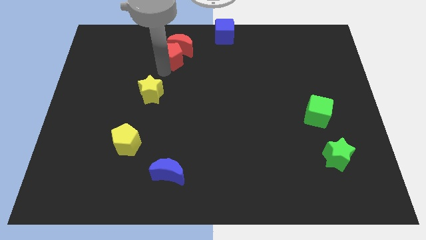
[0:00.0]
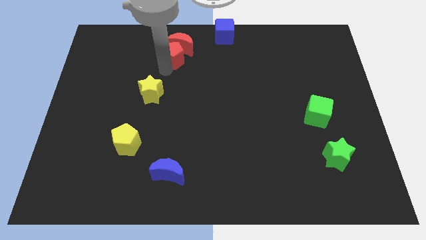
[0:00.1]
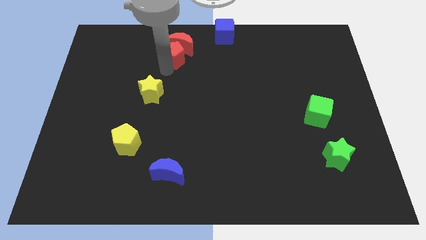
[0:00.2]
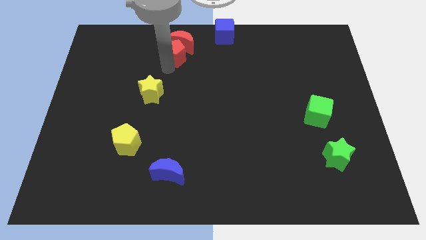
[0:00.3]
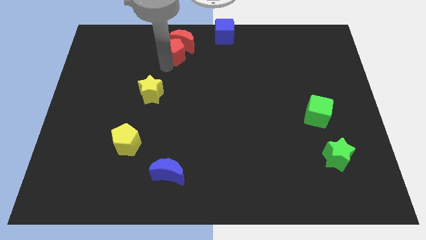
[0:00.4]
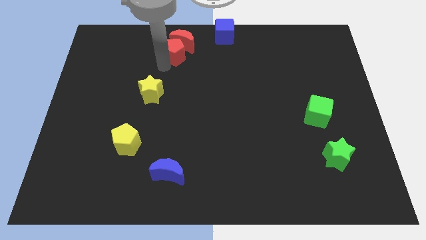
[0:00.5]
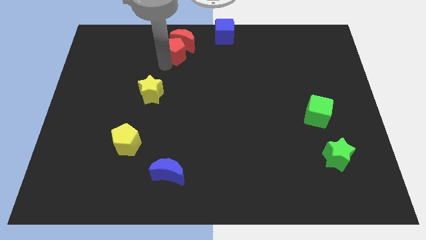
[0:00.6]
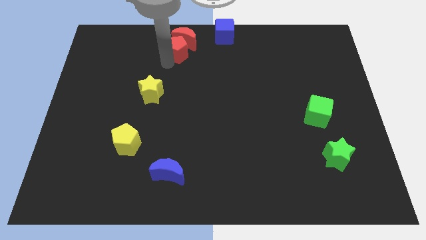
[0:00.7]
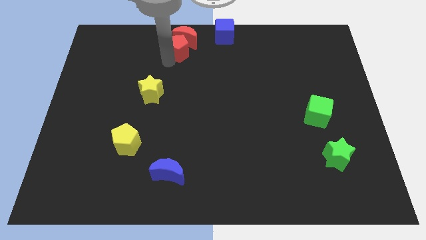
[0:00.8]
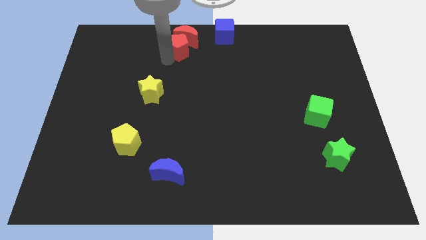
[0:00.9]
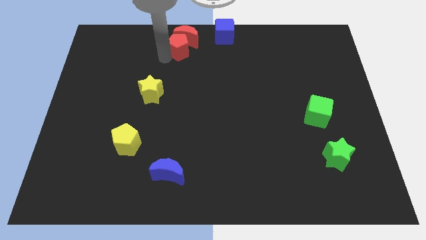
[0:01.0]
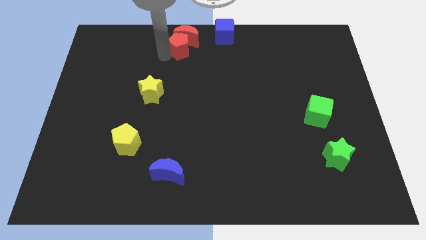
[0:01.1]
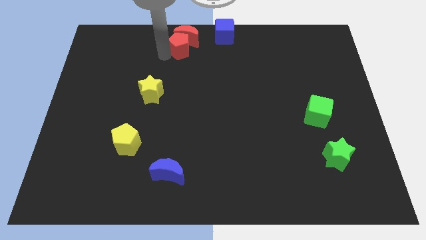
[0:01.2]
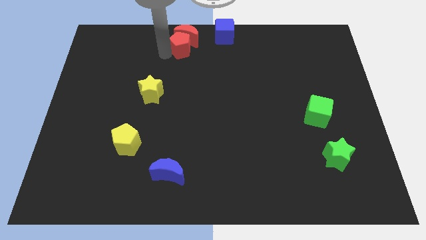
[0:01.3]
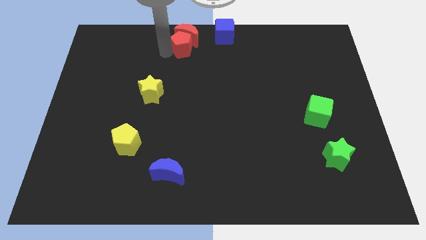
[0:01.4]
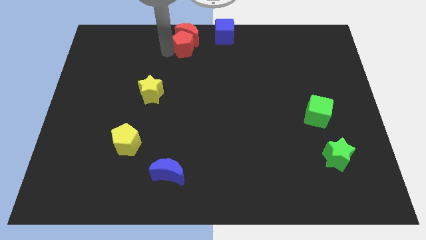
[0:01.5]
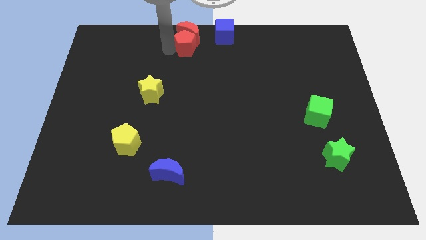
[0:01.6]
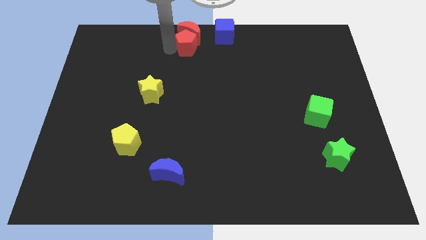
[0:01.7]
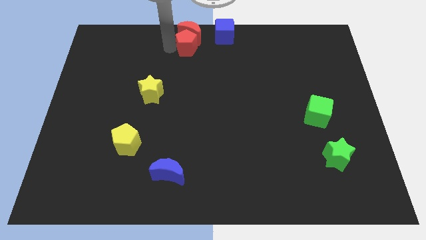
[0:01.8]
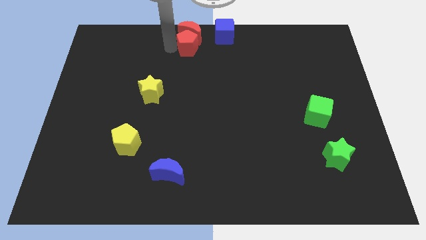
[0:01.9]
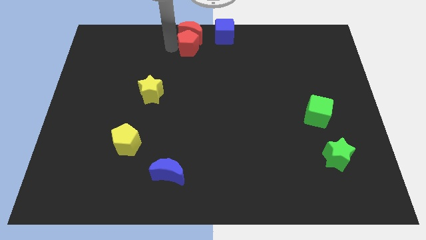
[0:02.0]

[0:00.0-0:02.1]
move red pentagon along the red crescent towards the left of blue cube

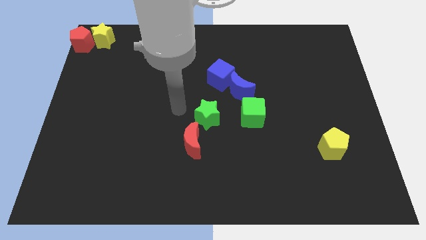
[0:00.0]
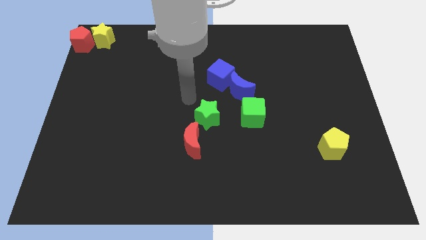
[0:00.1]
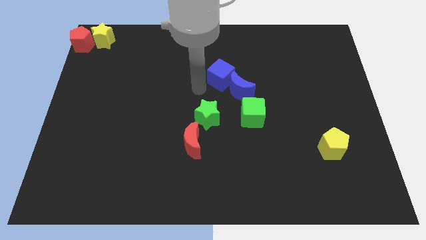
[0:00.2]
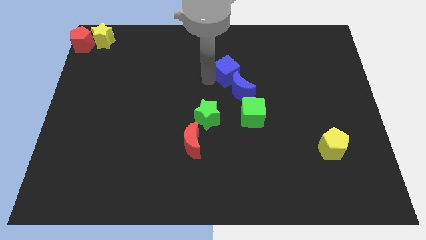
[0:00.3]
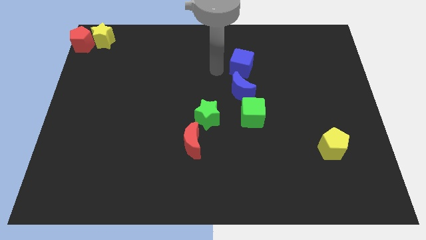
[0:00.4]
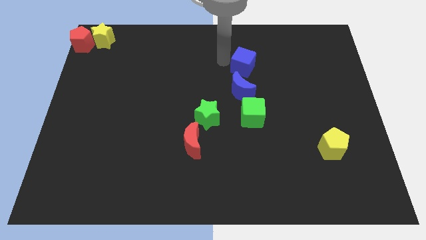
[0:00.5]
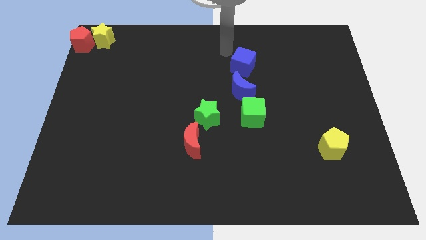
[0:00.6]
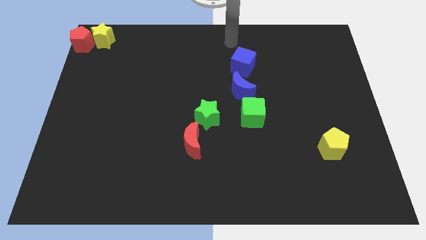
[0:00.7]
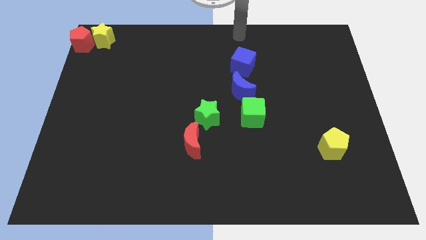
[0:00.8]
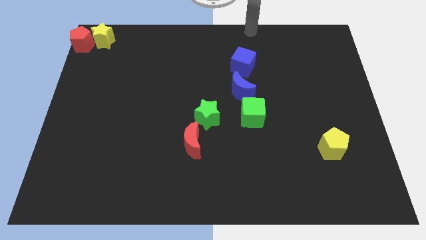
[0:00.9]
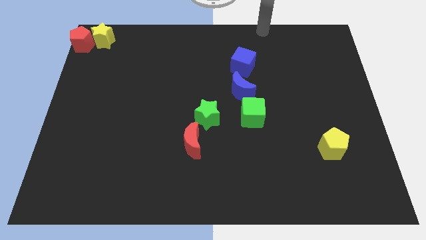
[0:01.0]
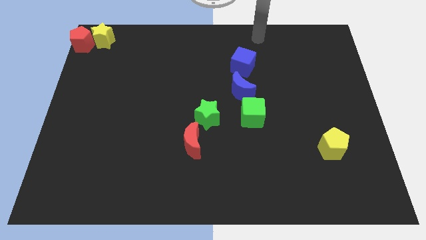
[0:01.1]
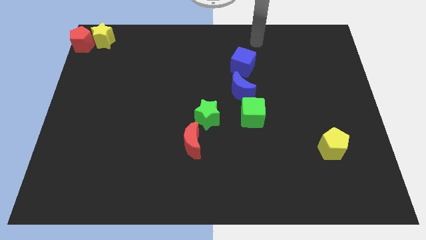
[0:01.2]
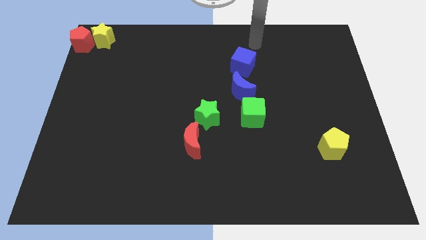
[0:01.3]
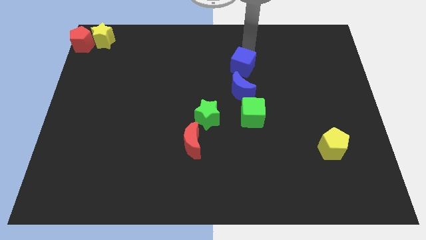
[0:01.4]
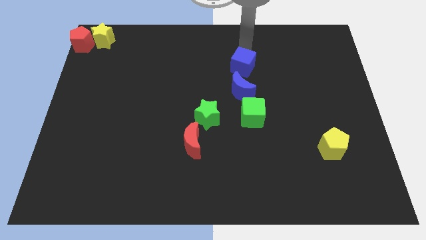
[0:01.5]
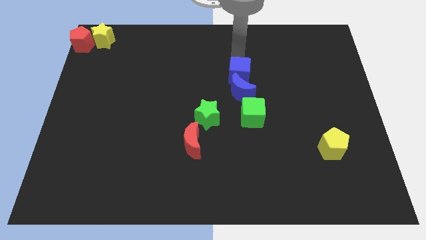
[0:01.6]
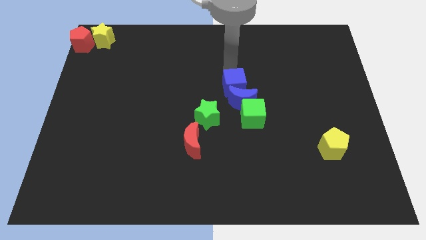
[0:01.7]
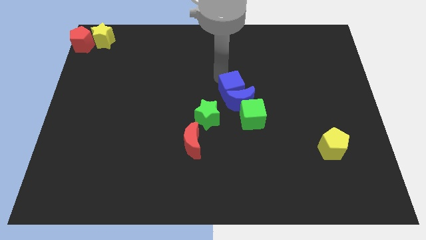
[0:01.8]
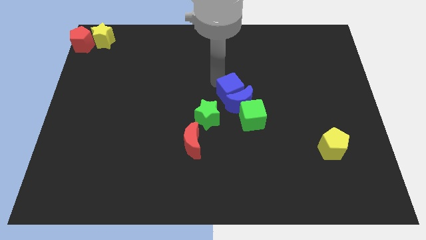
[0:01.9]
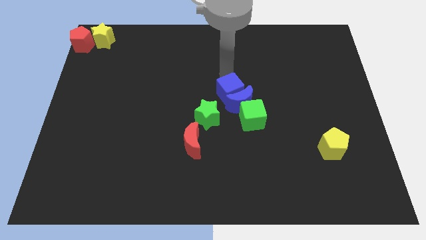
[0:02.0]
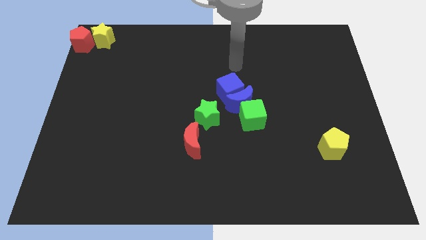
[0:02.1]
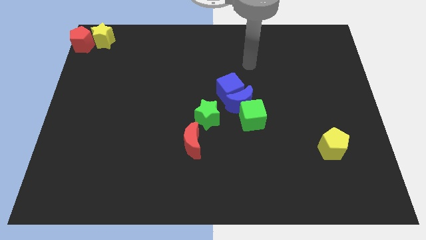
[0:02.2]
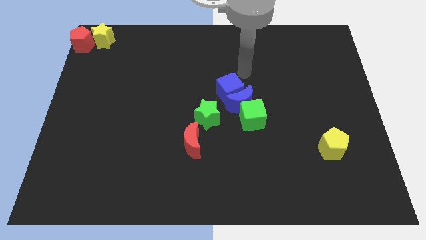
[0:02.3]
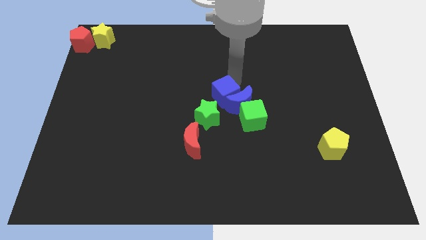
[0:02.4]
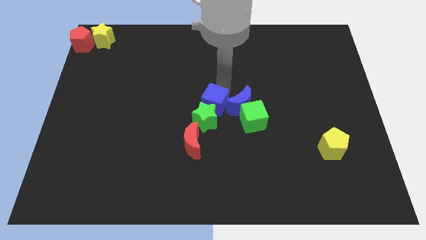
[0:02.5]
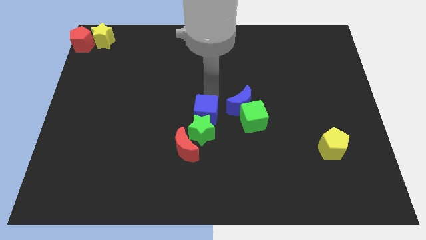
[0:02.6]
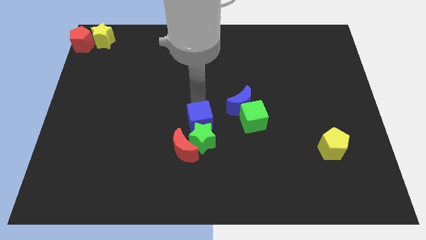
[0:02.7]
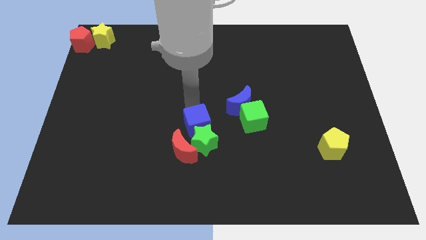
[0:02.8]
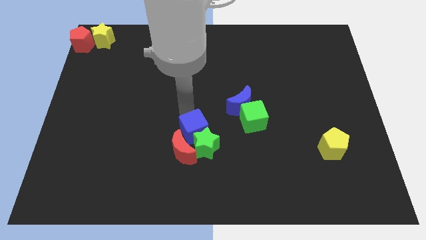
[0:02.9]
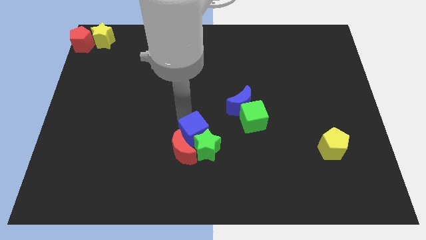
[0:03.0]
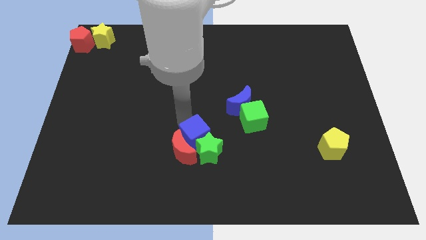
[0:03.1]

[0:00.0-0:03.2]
move the blue cube into the top left side of the green star

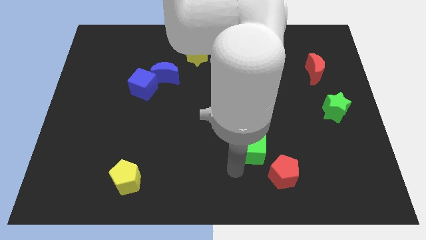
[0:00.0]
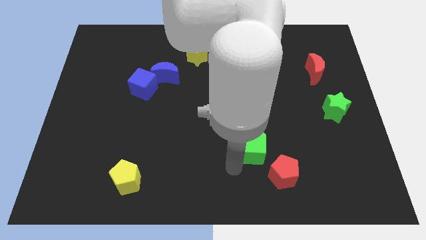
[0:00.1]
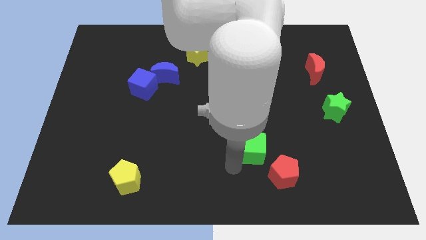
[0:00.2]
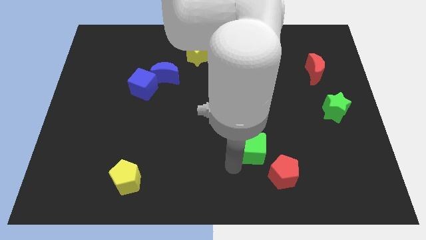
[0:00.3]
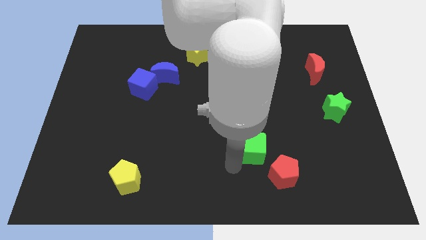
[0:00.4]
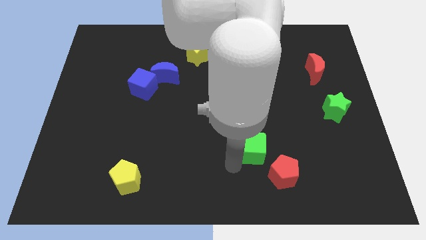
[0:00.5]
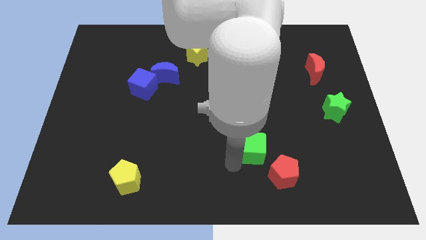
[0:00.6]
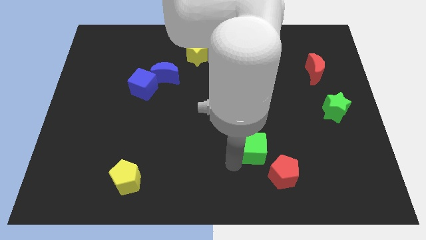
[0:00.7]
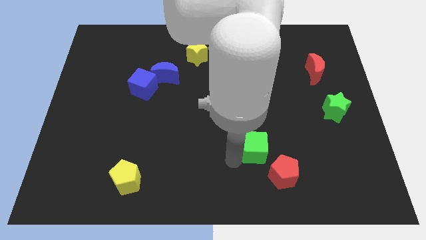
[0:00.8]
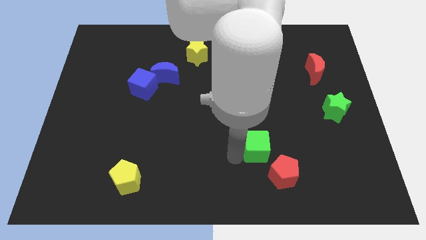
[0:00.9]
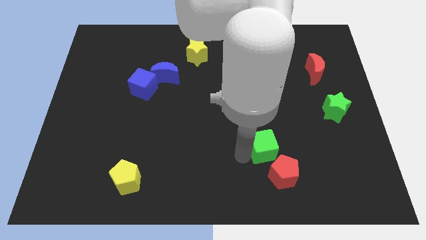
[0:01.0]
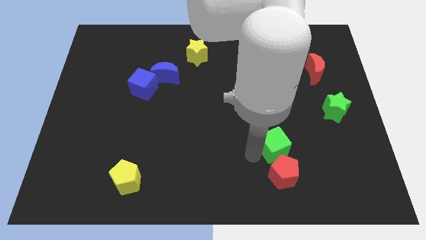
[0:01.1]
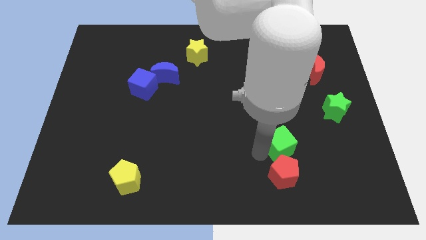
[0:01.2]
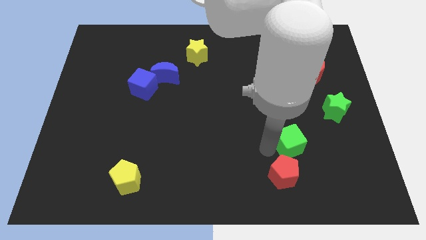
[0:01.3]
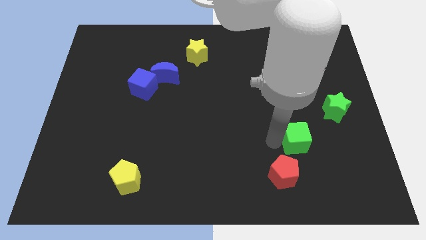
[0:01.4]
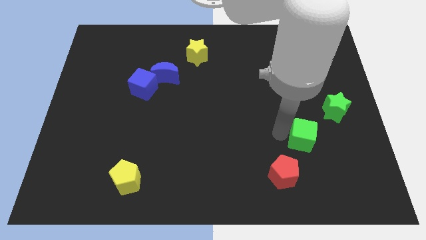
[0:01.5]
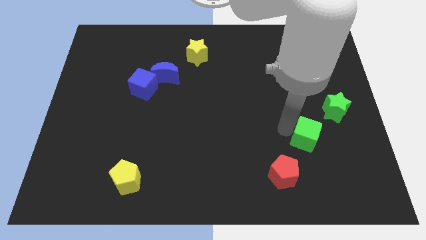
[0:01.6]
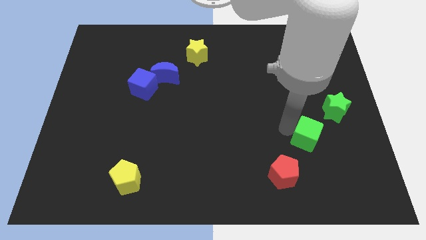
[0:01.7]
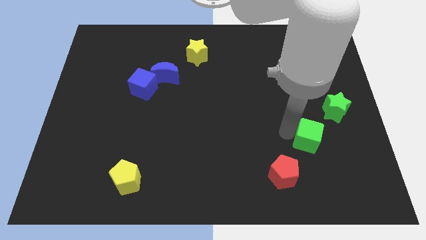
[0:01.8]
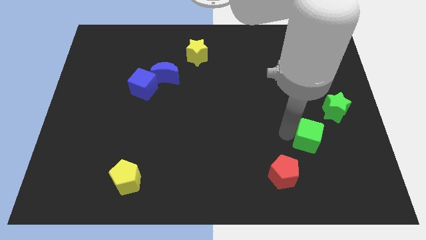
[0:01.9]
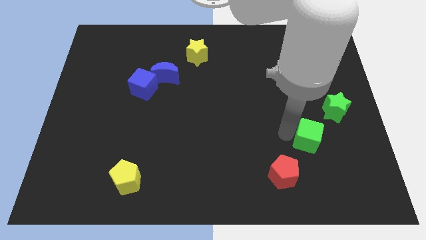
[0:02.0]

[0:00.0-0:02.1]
place the green cube in between green star and red pentagon diagonally

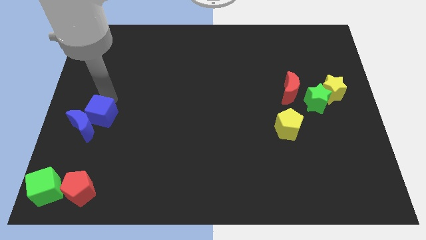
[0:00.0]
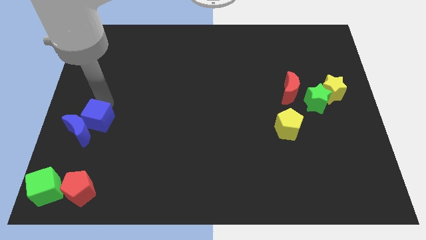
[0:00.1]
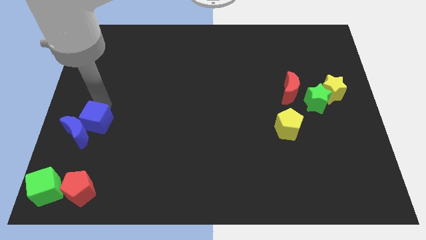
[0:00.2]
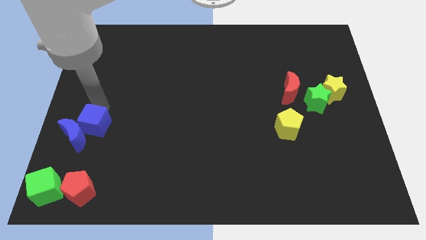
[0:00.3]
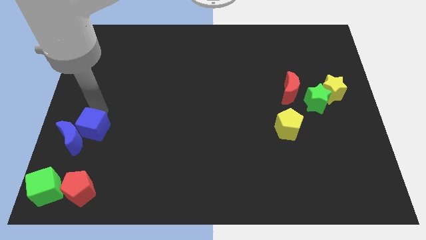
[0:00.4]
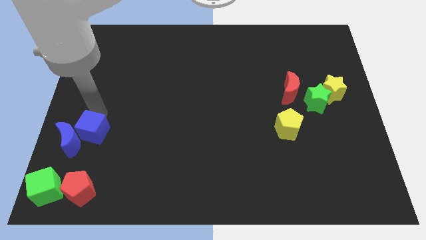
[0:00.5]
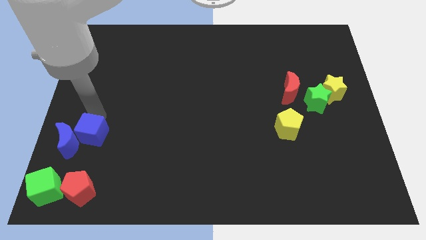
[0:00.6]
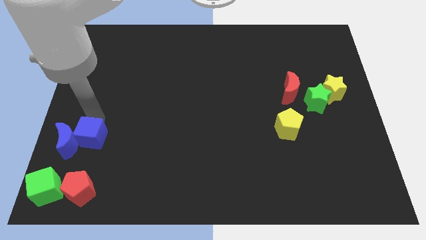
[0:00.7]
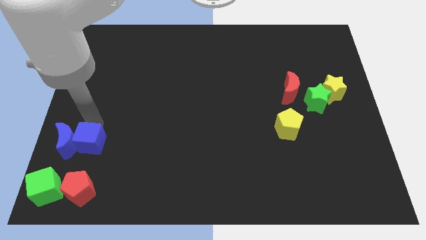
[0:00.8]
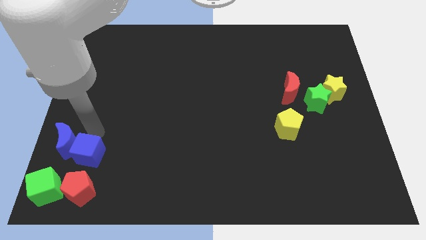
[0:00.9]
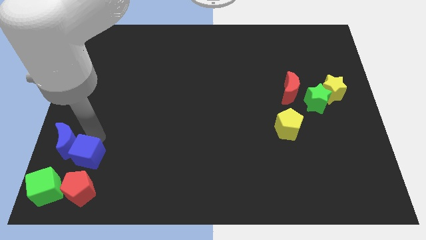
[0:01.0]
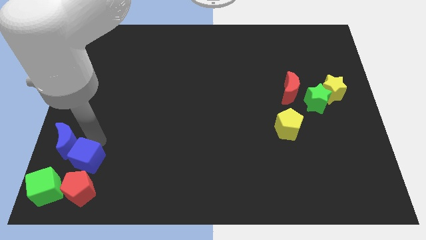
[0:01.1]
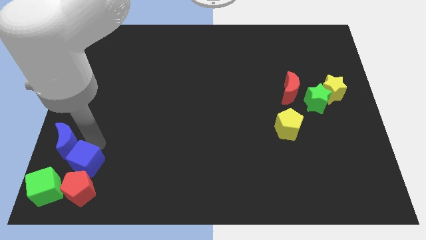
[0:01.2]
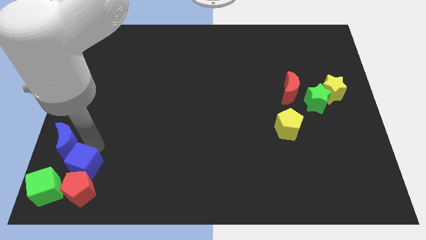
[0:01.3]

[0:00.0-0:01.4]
move the blue cube into the red pentagon

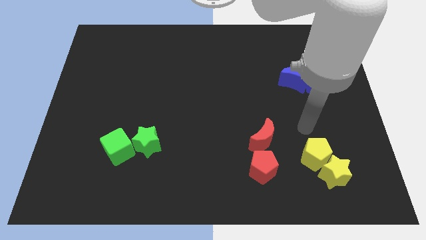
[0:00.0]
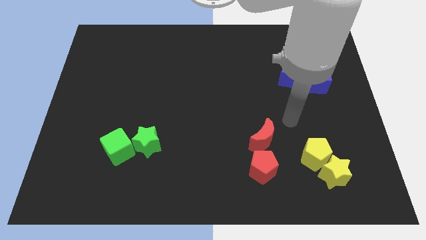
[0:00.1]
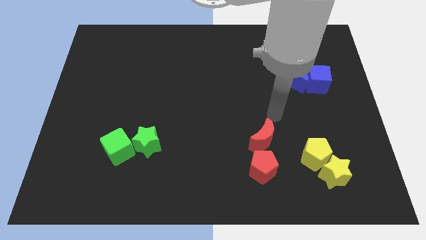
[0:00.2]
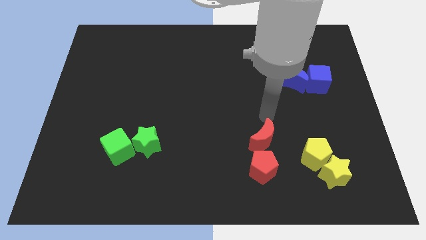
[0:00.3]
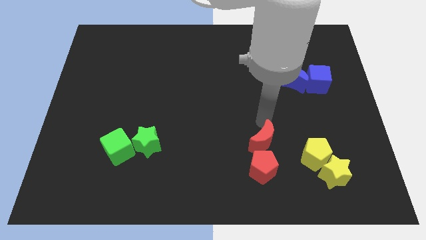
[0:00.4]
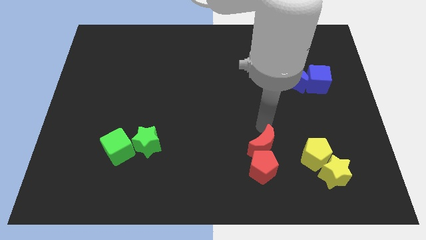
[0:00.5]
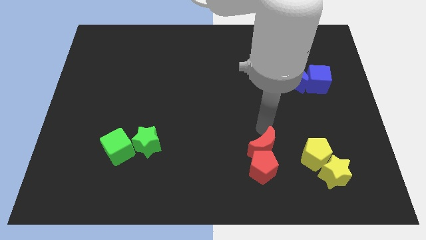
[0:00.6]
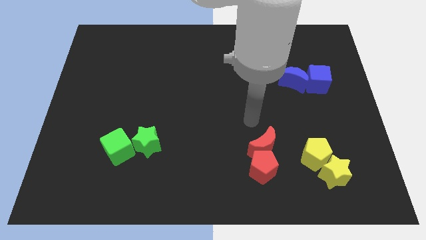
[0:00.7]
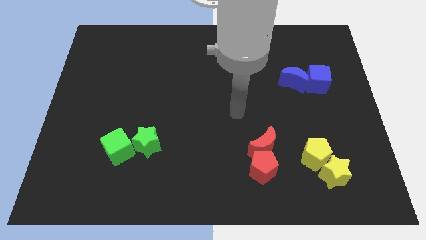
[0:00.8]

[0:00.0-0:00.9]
push the red crescent close to the red pentagon
